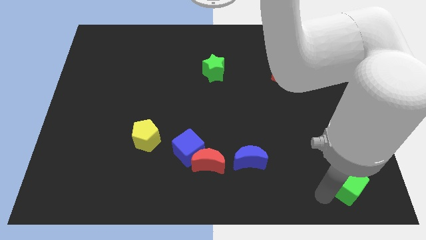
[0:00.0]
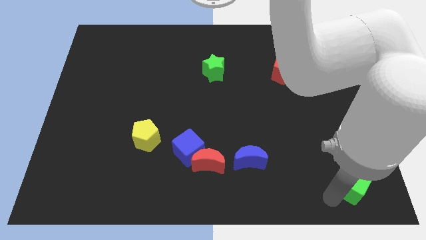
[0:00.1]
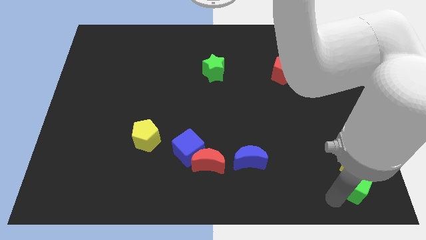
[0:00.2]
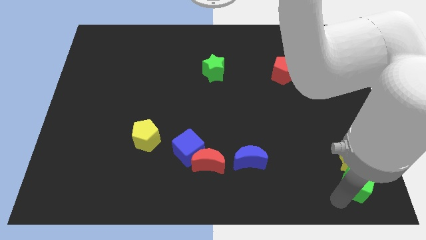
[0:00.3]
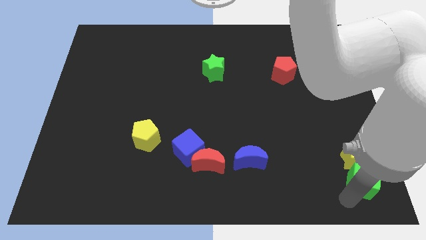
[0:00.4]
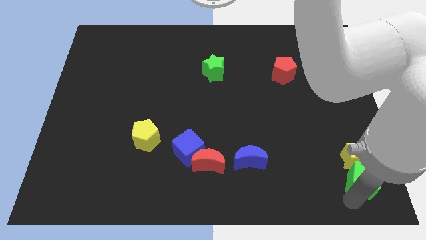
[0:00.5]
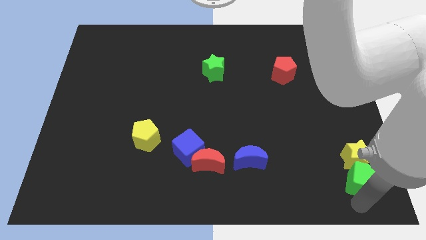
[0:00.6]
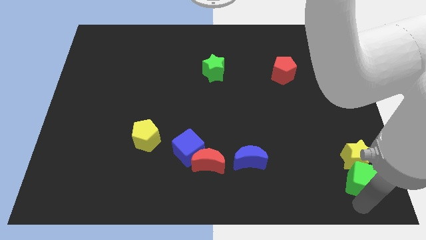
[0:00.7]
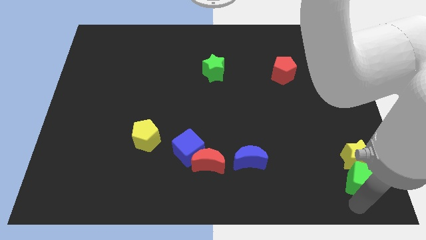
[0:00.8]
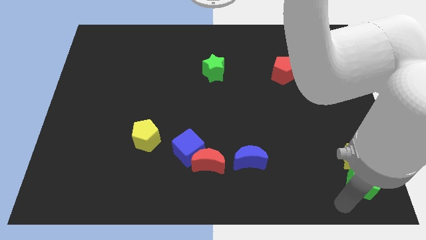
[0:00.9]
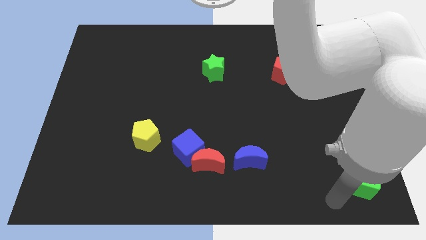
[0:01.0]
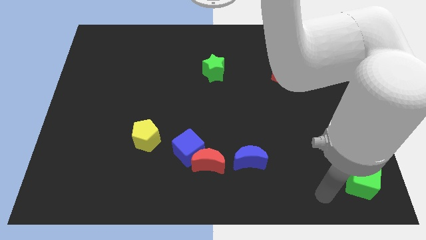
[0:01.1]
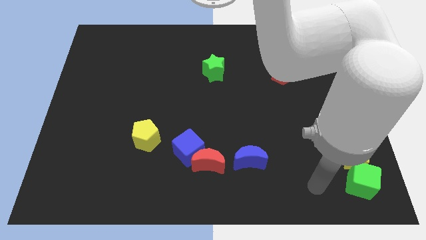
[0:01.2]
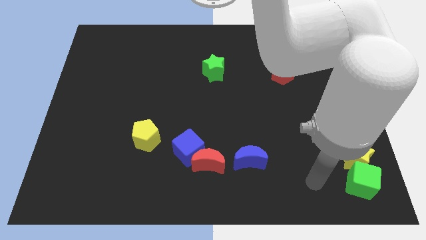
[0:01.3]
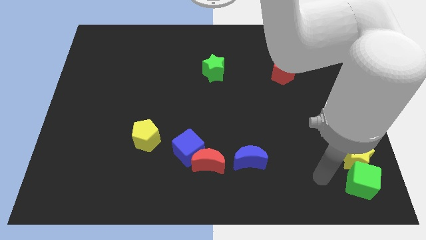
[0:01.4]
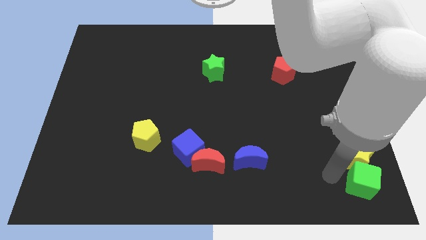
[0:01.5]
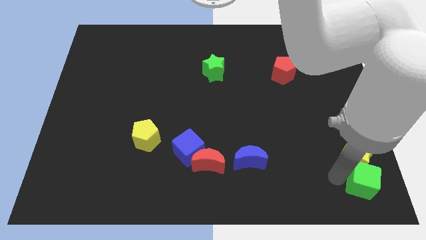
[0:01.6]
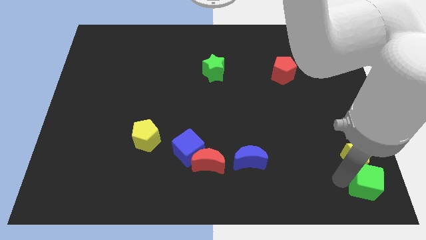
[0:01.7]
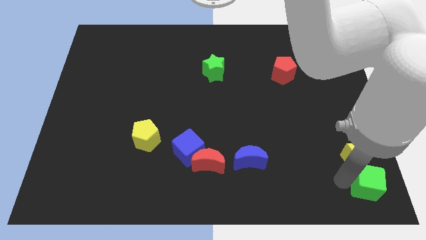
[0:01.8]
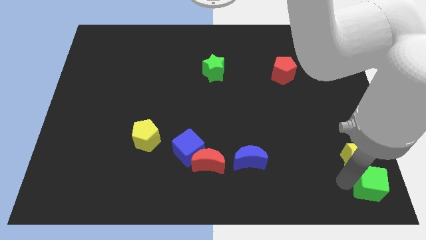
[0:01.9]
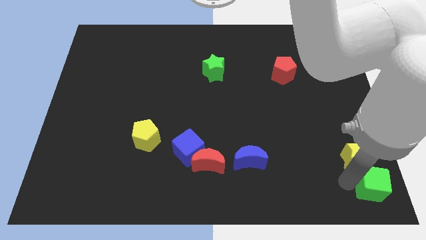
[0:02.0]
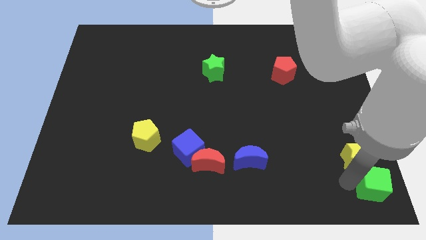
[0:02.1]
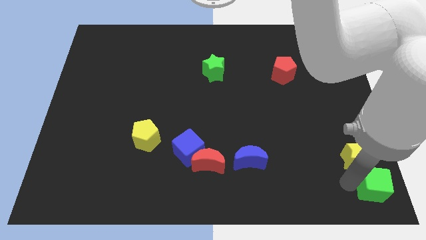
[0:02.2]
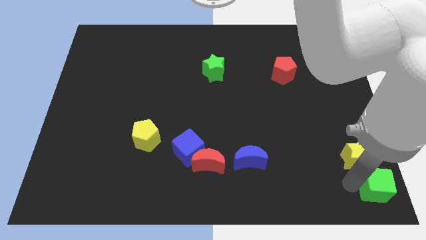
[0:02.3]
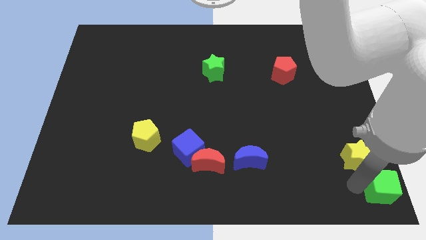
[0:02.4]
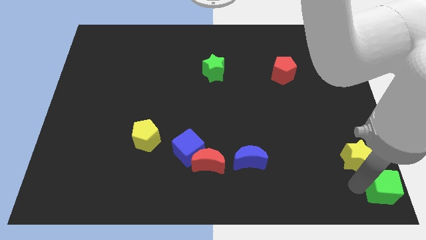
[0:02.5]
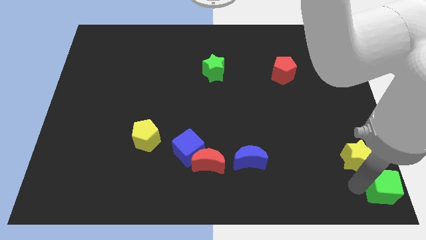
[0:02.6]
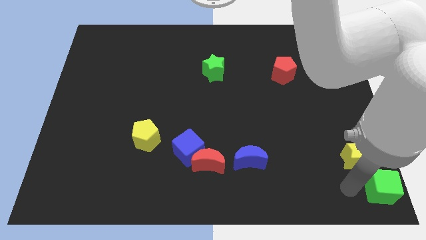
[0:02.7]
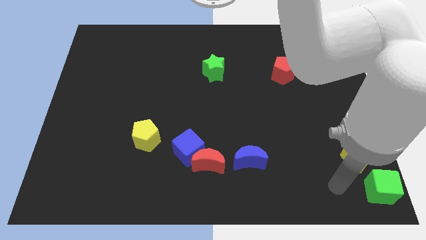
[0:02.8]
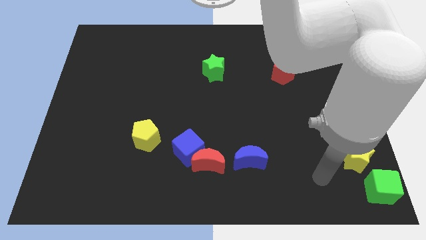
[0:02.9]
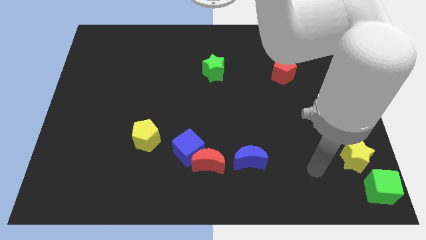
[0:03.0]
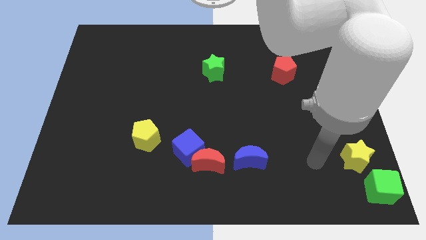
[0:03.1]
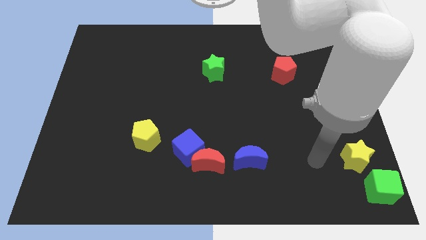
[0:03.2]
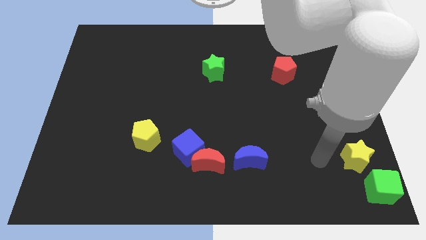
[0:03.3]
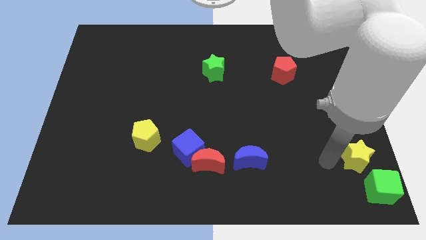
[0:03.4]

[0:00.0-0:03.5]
push the green cube slightly to the right

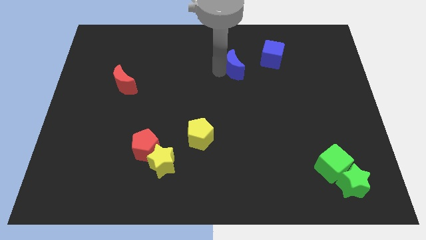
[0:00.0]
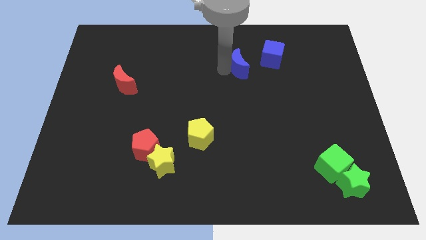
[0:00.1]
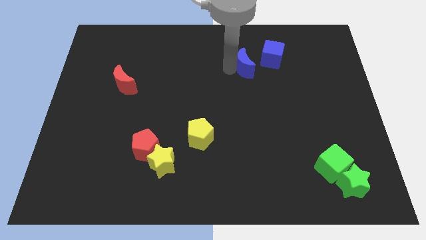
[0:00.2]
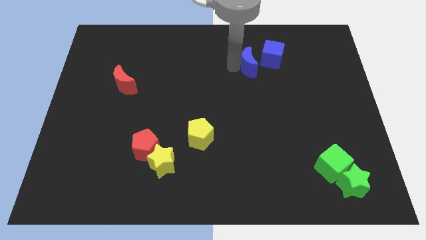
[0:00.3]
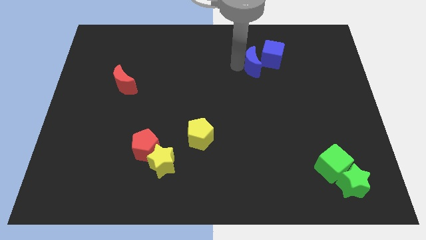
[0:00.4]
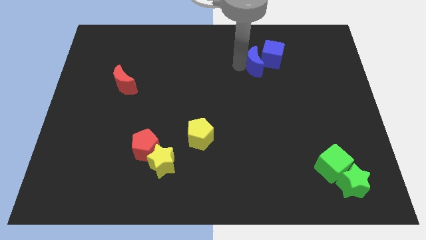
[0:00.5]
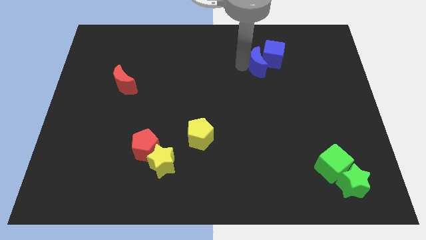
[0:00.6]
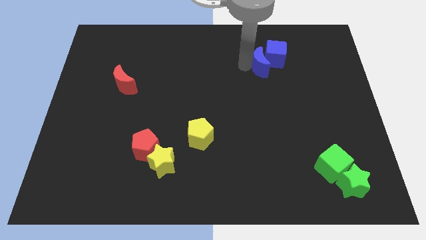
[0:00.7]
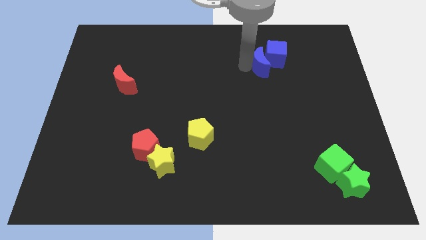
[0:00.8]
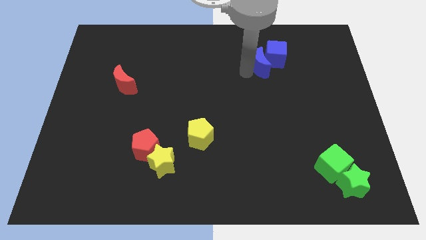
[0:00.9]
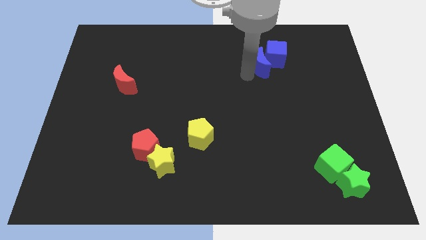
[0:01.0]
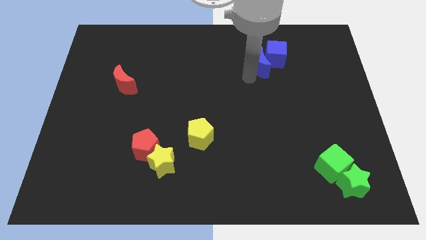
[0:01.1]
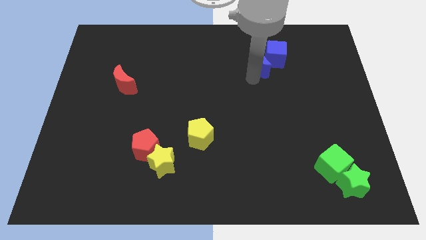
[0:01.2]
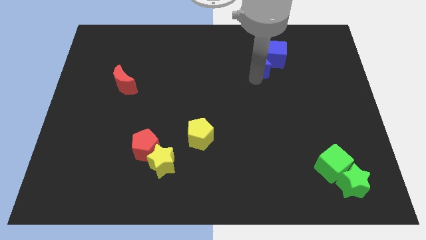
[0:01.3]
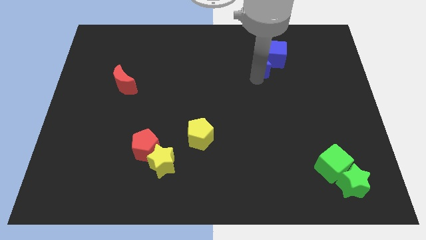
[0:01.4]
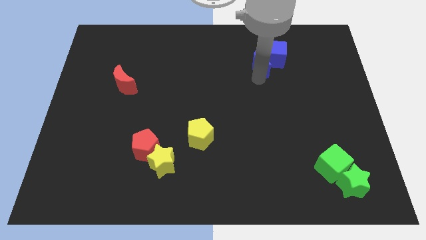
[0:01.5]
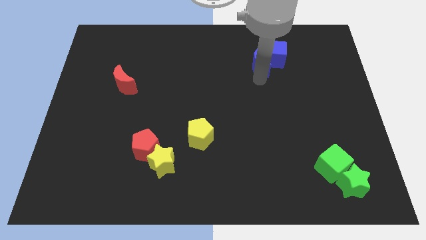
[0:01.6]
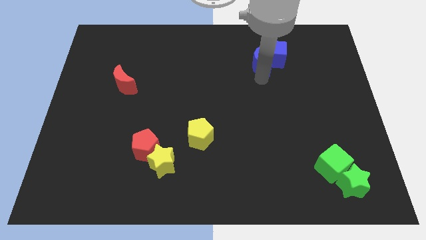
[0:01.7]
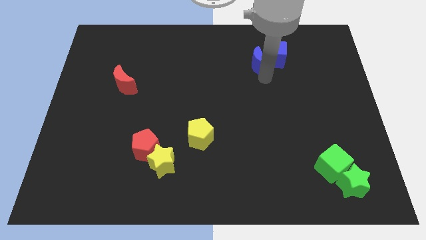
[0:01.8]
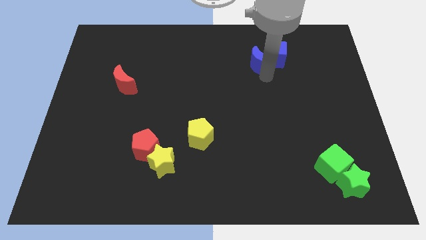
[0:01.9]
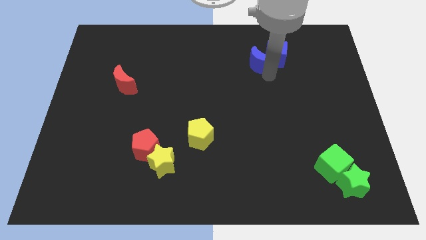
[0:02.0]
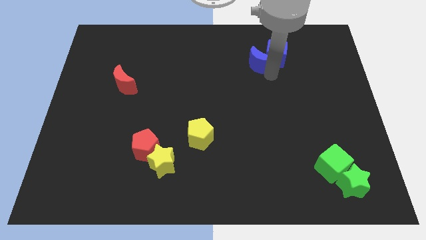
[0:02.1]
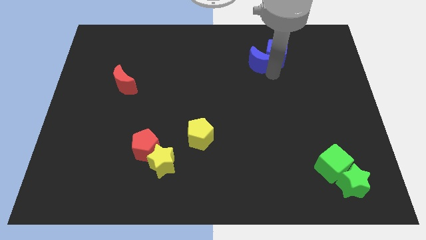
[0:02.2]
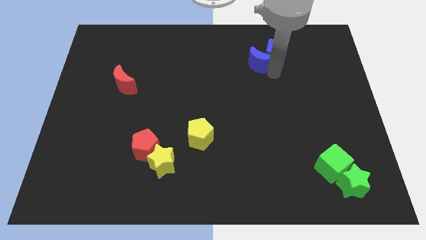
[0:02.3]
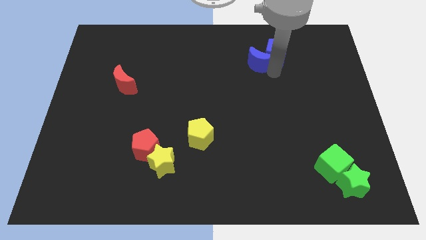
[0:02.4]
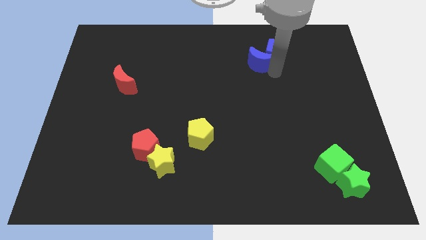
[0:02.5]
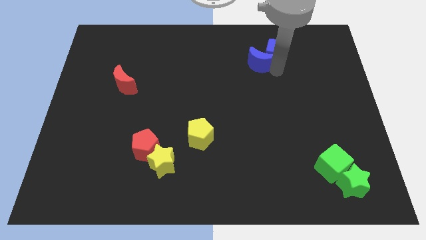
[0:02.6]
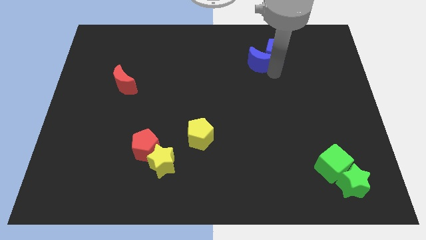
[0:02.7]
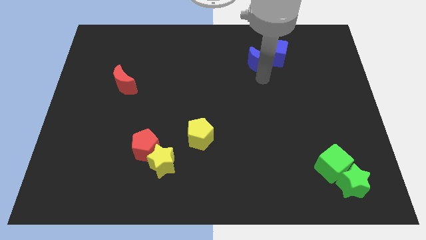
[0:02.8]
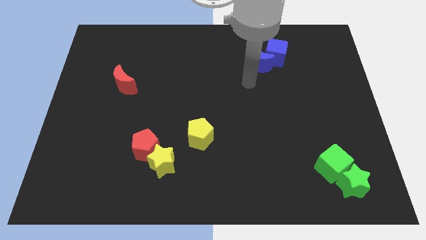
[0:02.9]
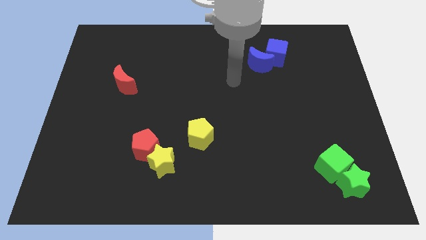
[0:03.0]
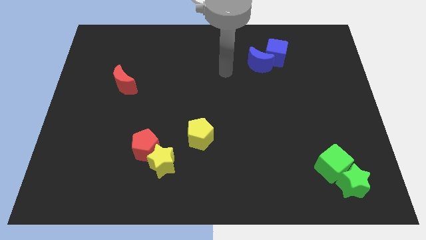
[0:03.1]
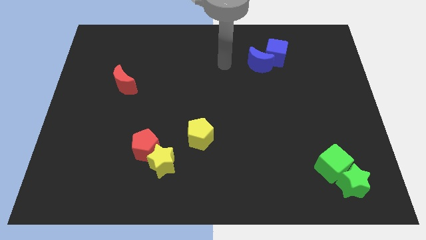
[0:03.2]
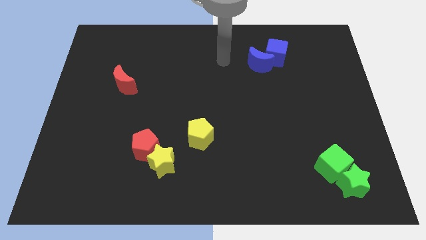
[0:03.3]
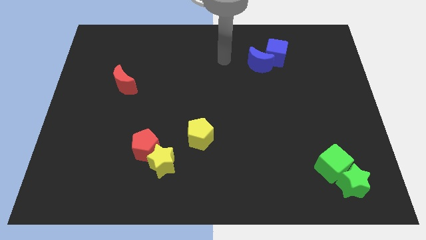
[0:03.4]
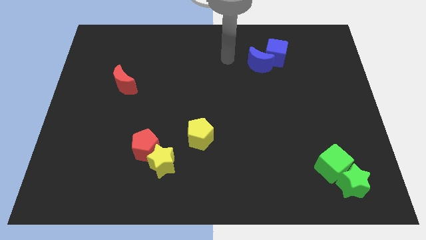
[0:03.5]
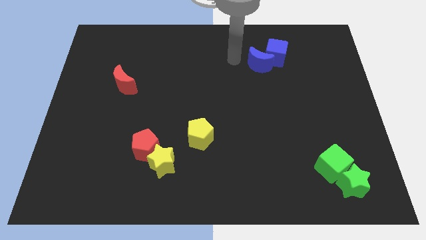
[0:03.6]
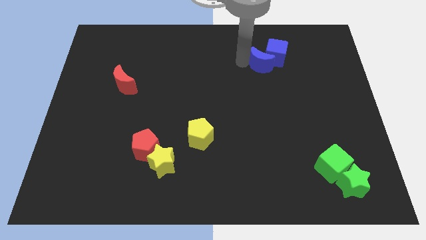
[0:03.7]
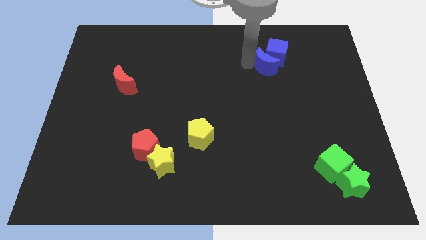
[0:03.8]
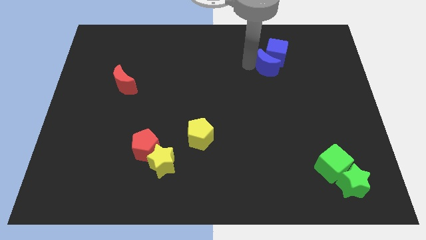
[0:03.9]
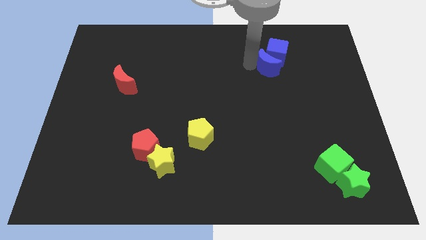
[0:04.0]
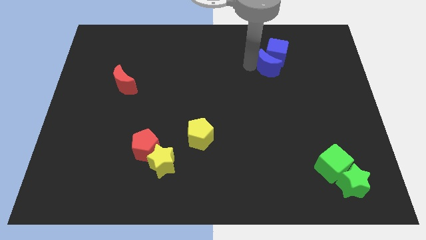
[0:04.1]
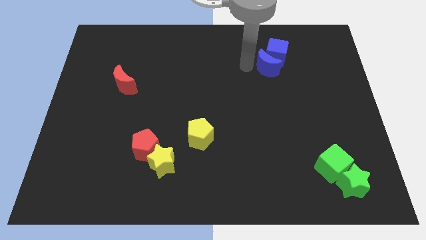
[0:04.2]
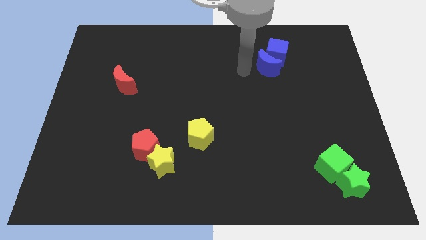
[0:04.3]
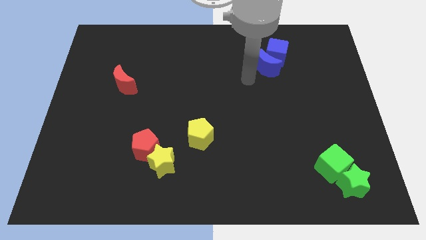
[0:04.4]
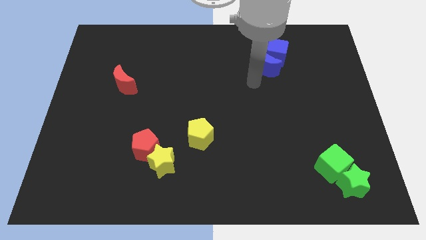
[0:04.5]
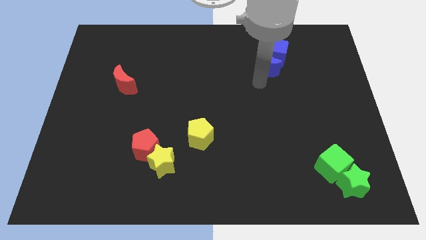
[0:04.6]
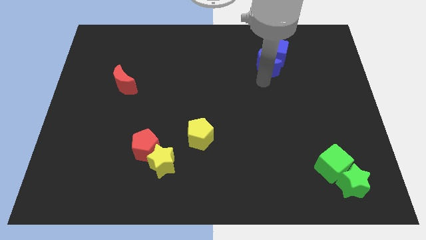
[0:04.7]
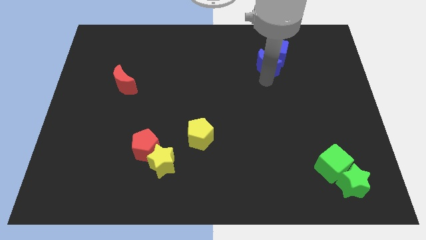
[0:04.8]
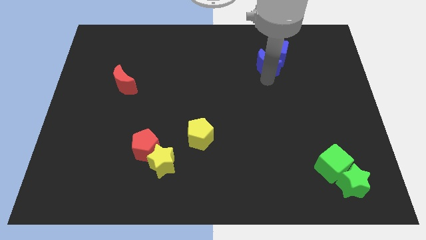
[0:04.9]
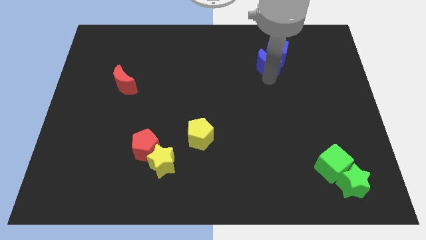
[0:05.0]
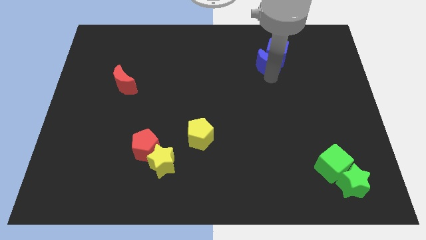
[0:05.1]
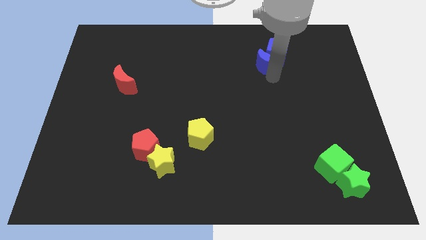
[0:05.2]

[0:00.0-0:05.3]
push the blue crescent into the blue cube

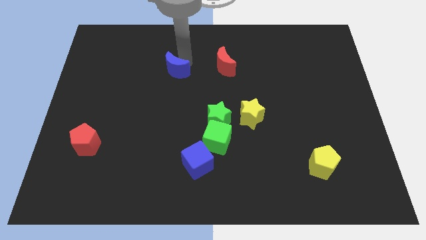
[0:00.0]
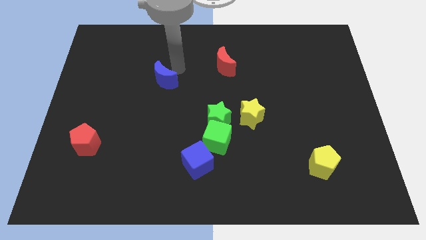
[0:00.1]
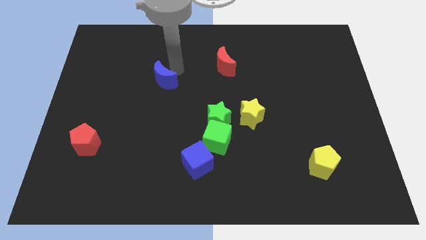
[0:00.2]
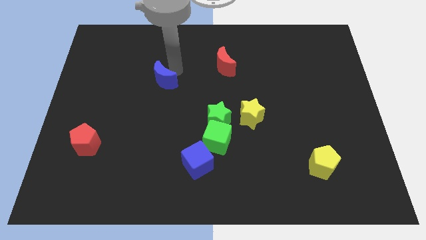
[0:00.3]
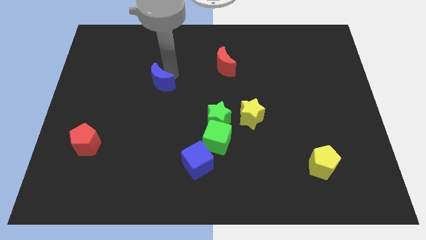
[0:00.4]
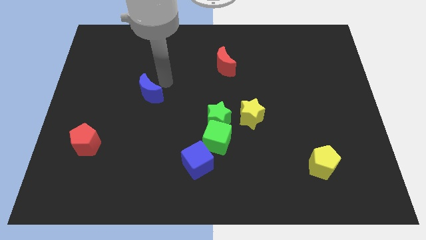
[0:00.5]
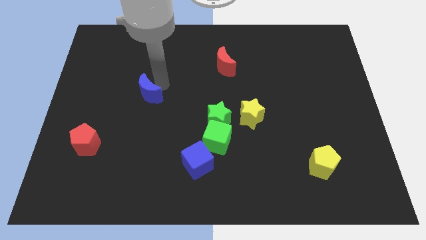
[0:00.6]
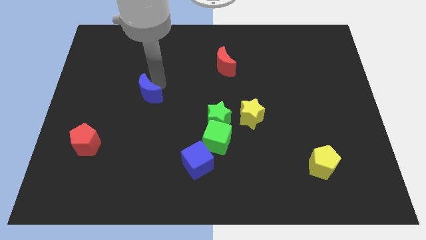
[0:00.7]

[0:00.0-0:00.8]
push the blue moon slightly towards the bottom side of the board
